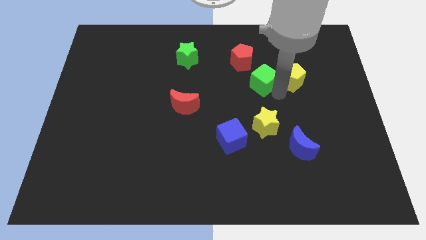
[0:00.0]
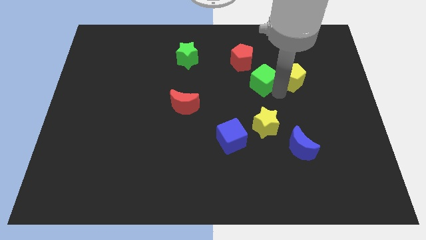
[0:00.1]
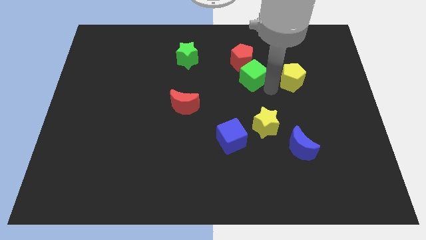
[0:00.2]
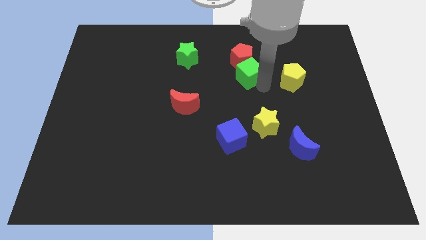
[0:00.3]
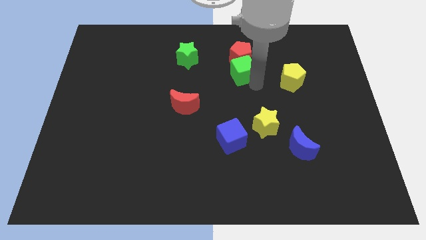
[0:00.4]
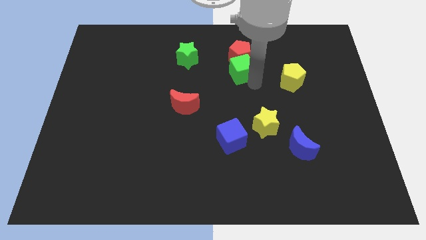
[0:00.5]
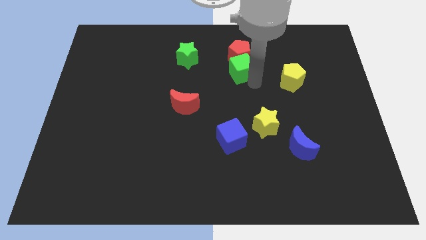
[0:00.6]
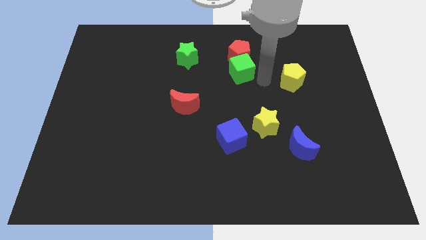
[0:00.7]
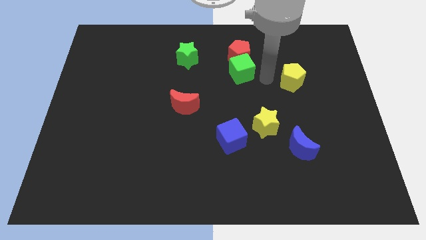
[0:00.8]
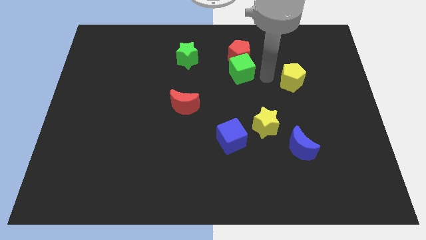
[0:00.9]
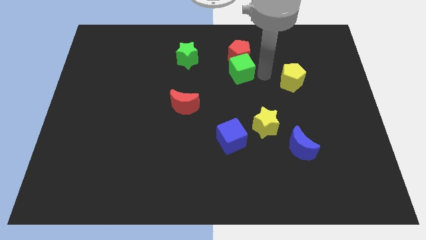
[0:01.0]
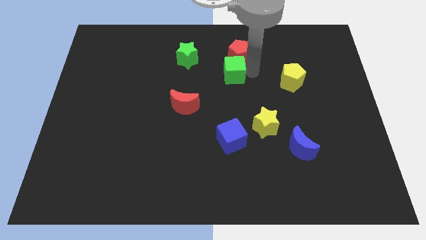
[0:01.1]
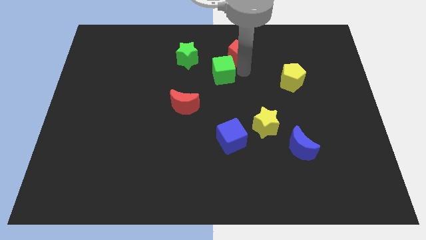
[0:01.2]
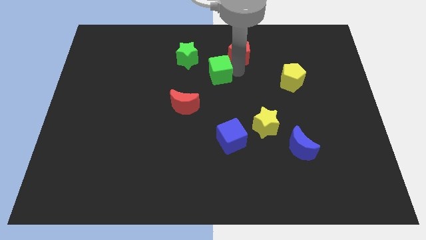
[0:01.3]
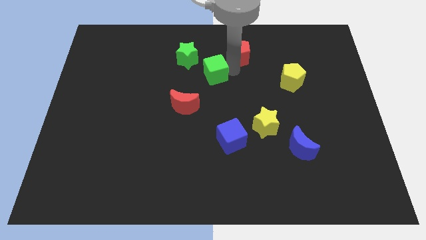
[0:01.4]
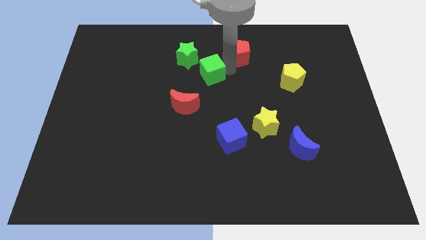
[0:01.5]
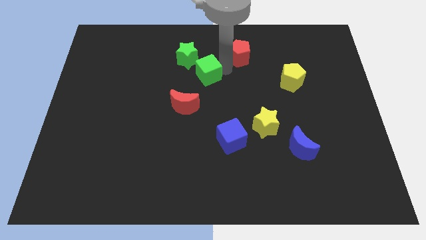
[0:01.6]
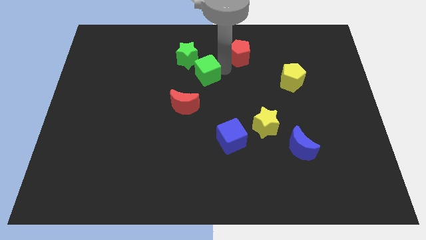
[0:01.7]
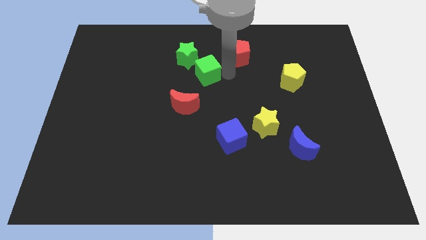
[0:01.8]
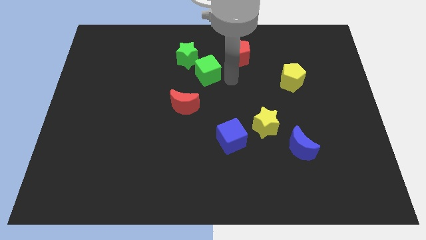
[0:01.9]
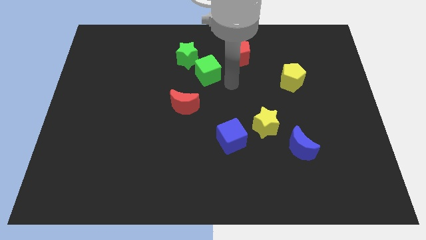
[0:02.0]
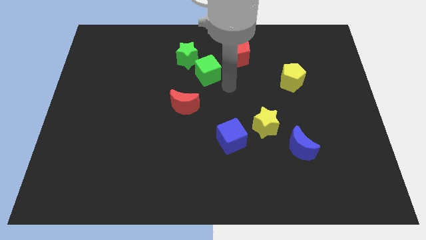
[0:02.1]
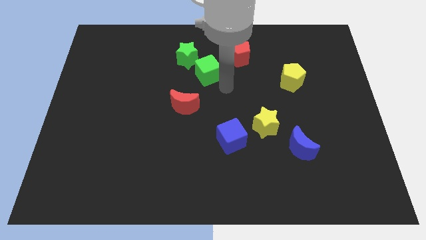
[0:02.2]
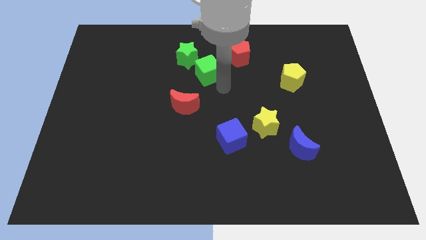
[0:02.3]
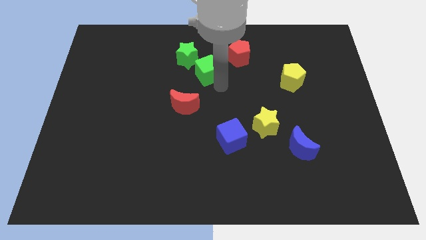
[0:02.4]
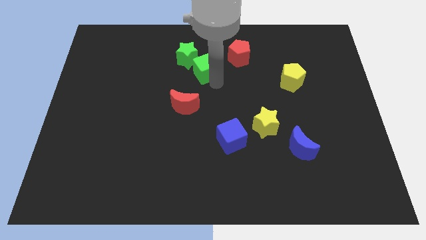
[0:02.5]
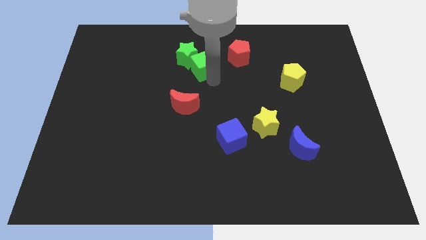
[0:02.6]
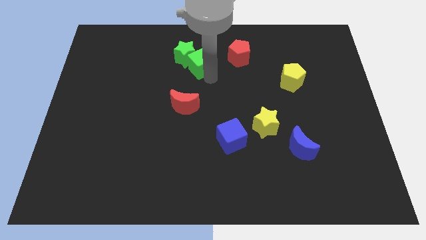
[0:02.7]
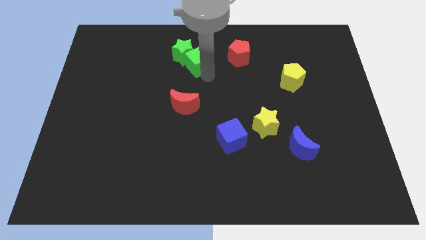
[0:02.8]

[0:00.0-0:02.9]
push the green cube into the green star

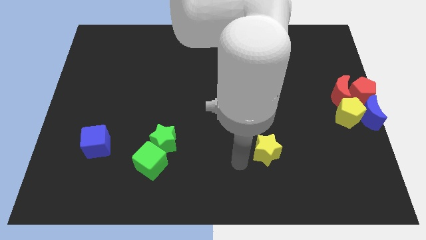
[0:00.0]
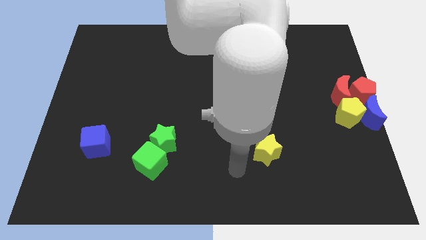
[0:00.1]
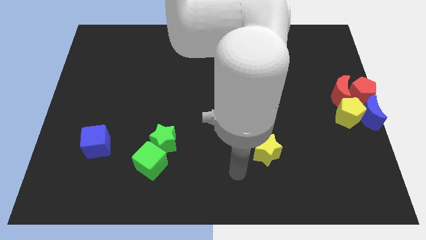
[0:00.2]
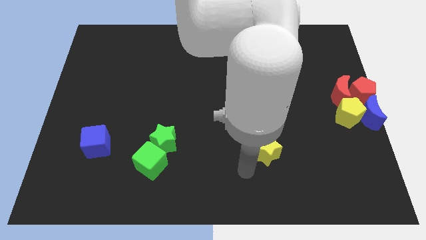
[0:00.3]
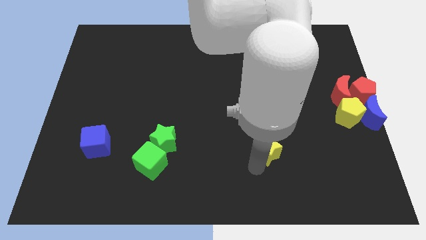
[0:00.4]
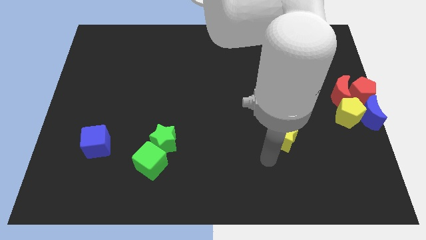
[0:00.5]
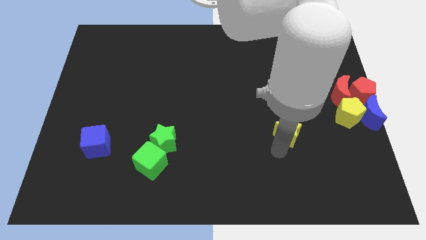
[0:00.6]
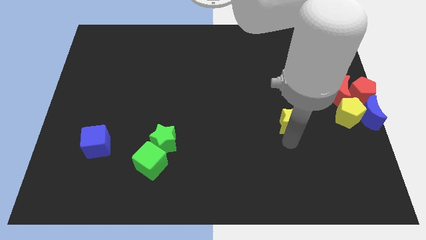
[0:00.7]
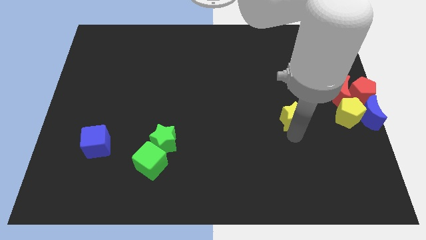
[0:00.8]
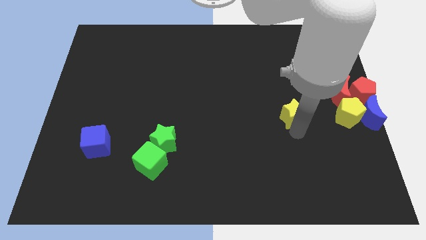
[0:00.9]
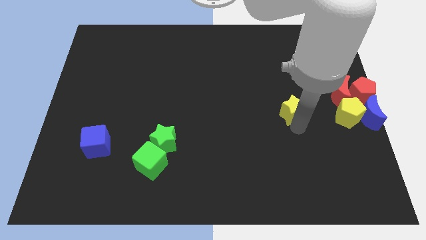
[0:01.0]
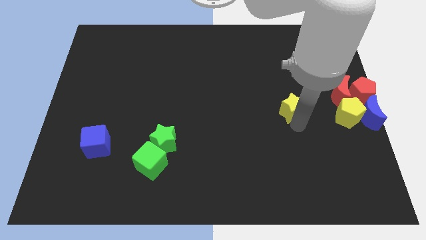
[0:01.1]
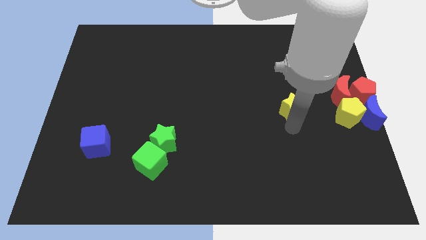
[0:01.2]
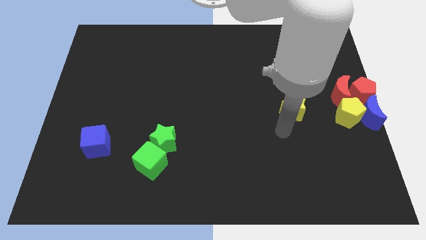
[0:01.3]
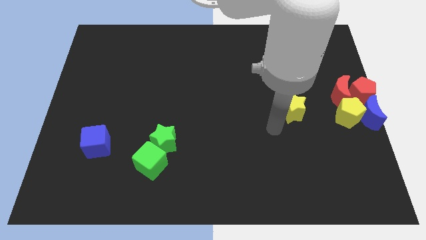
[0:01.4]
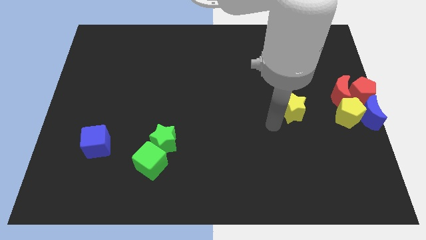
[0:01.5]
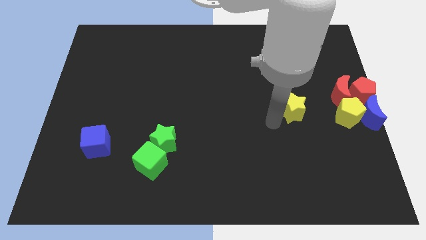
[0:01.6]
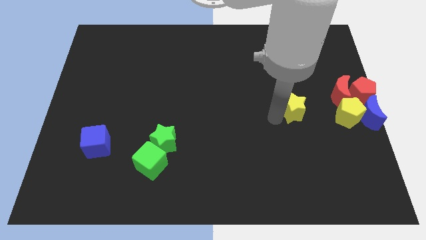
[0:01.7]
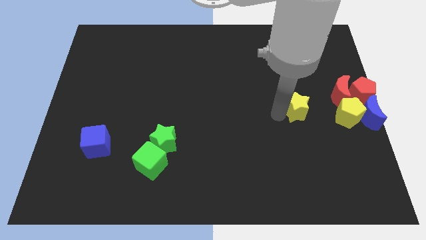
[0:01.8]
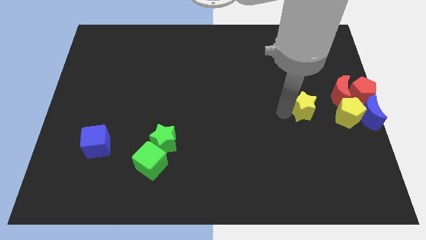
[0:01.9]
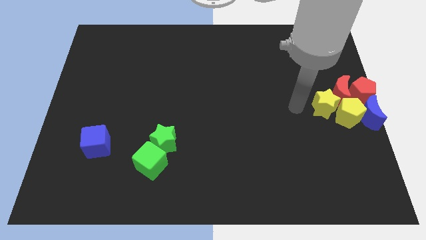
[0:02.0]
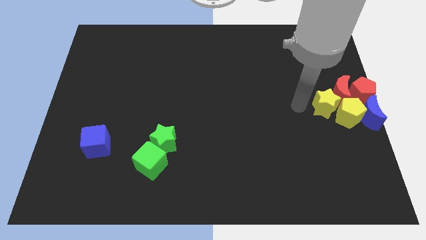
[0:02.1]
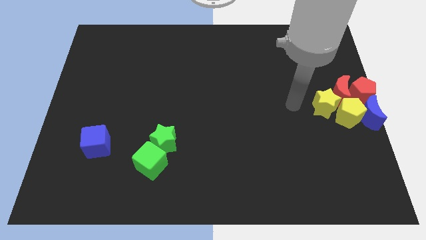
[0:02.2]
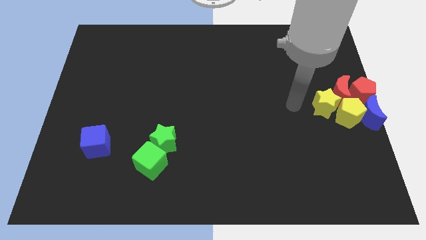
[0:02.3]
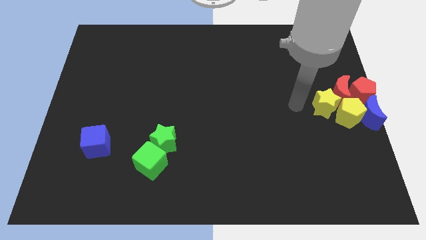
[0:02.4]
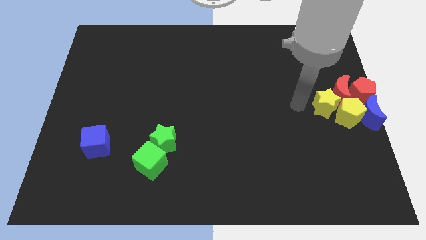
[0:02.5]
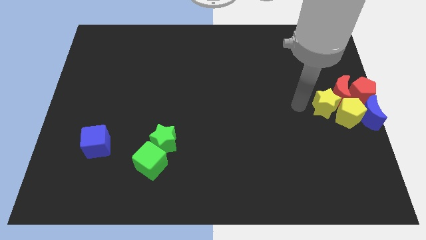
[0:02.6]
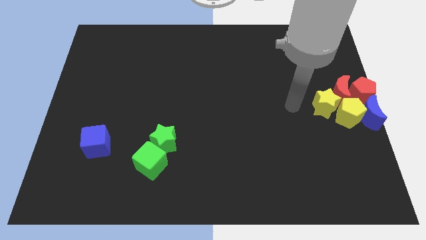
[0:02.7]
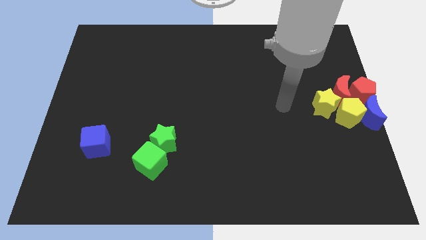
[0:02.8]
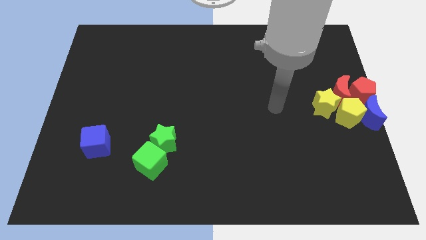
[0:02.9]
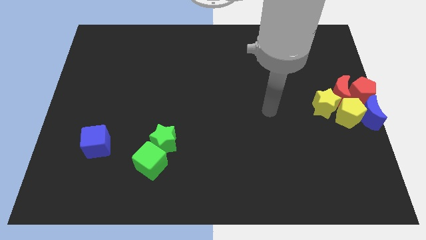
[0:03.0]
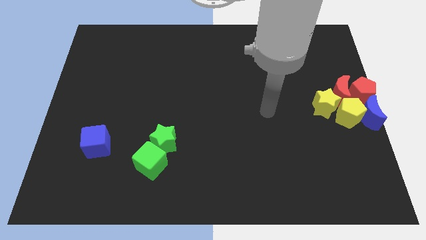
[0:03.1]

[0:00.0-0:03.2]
push the yellow star into the group of the blocks at the center right of the board

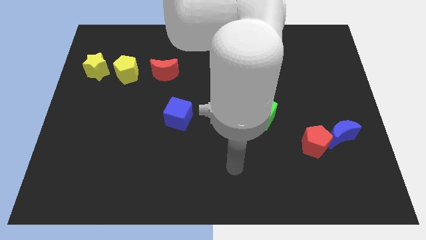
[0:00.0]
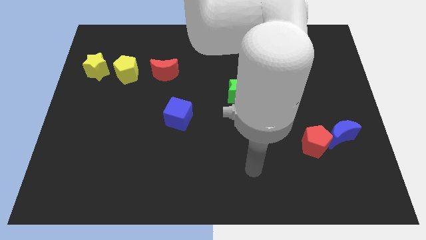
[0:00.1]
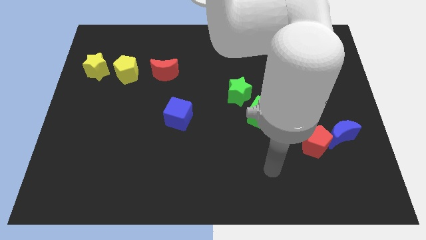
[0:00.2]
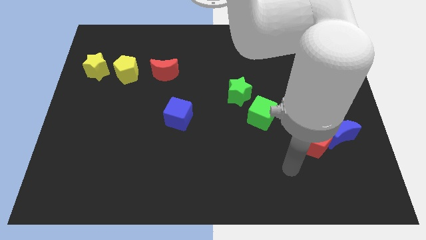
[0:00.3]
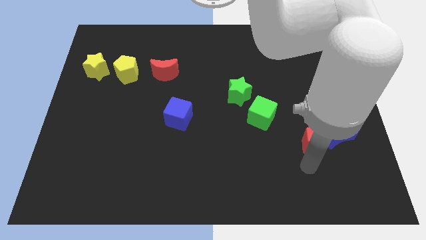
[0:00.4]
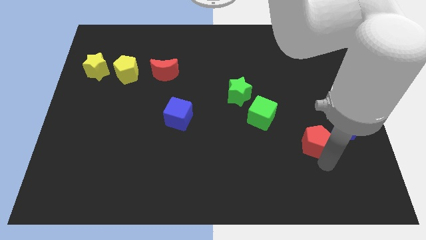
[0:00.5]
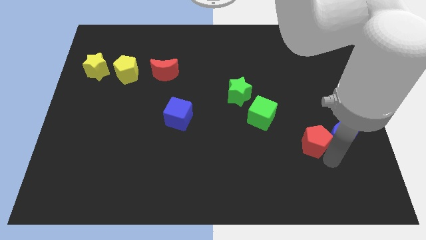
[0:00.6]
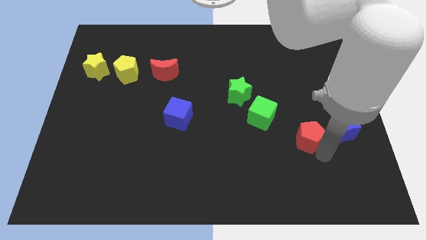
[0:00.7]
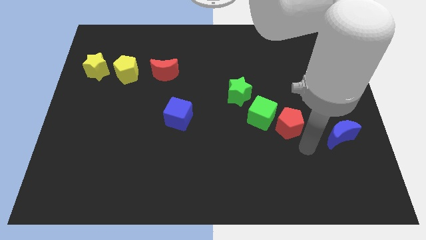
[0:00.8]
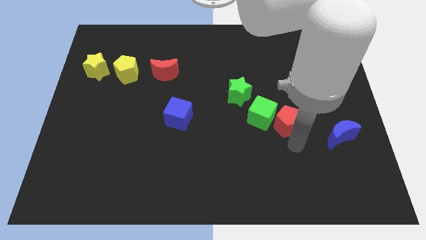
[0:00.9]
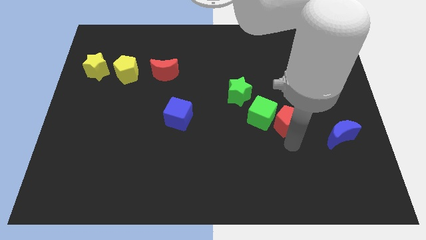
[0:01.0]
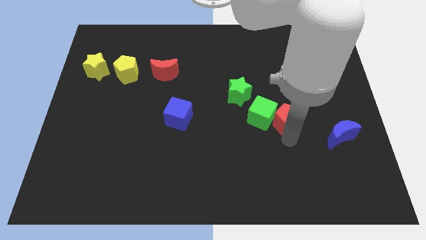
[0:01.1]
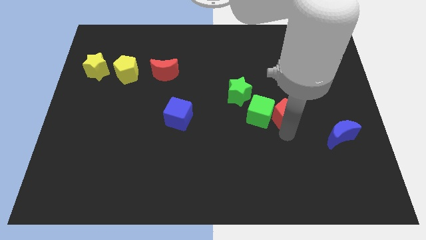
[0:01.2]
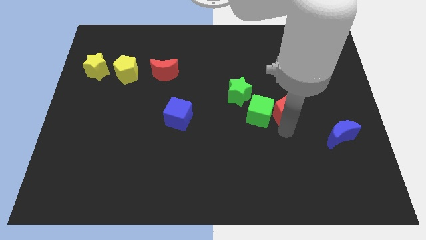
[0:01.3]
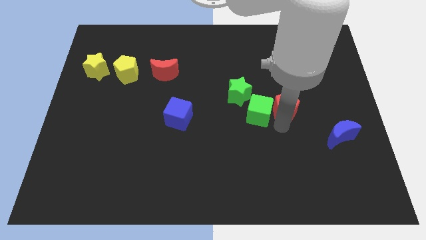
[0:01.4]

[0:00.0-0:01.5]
push the red pentagon to the right side of the green cube

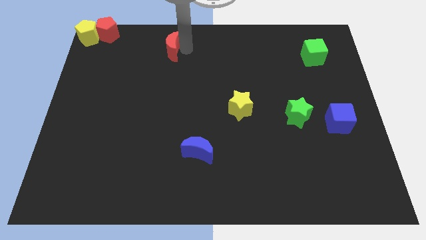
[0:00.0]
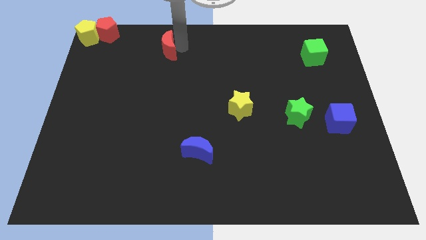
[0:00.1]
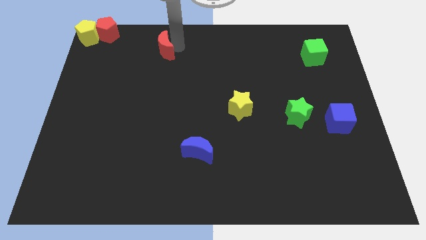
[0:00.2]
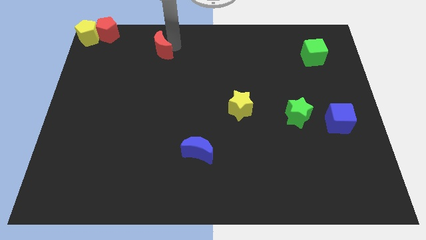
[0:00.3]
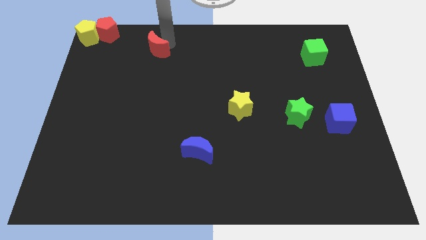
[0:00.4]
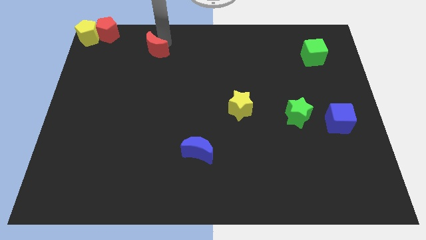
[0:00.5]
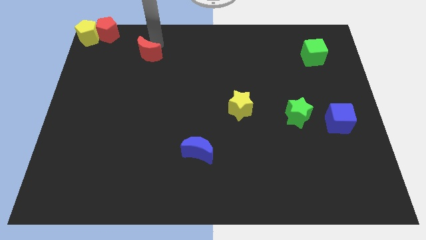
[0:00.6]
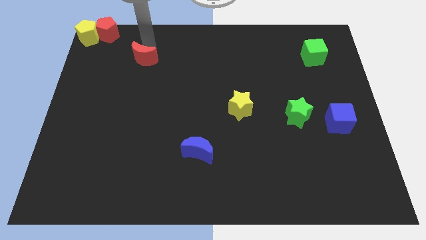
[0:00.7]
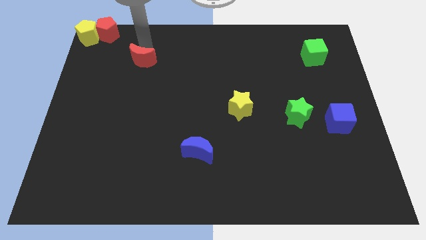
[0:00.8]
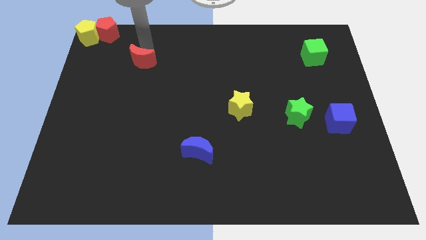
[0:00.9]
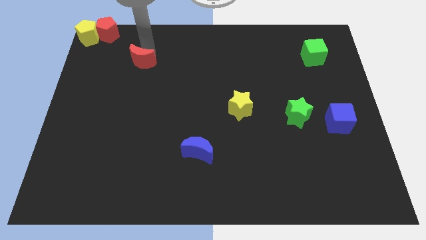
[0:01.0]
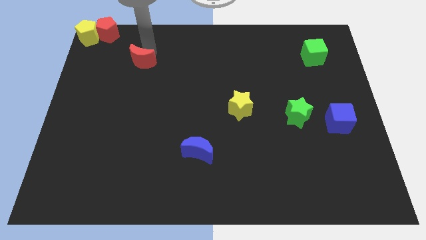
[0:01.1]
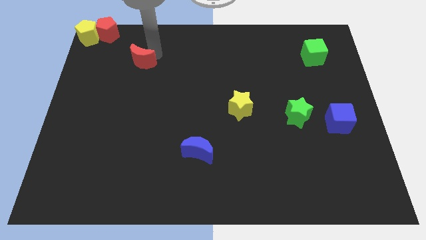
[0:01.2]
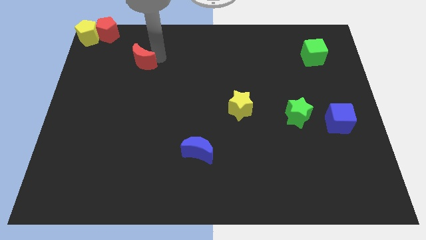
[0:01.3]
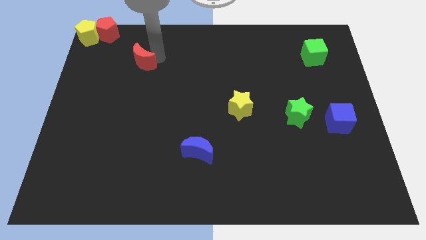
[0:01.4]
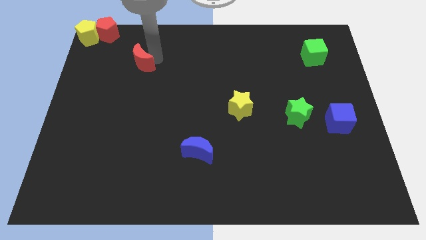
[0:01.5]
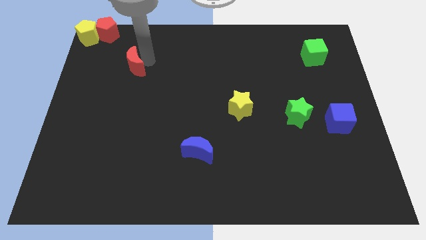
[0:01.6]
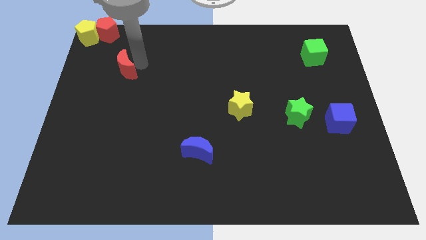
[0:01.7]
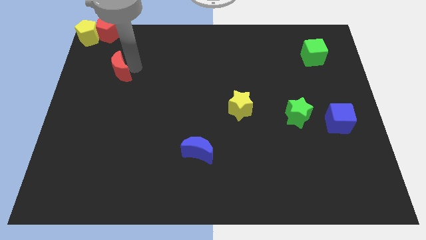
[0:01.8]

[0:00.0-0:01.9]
place the red moon to the center left
